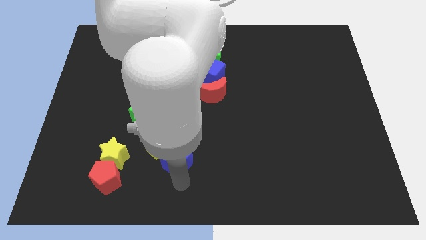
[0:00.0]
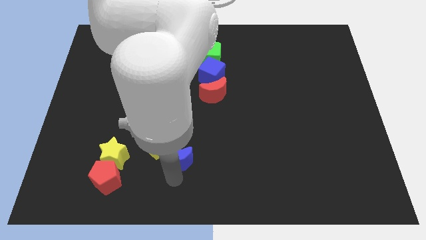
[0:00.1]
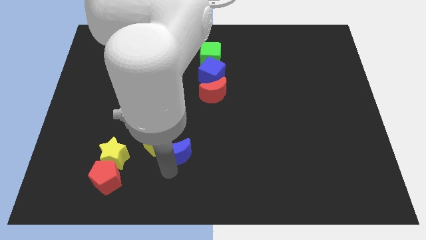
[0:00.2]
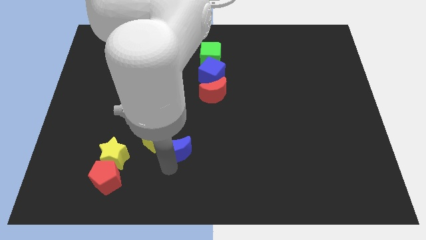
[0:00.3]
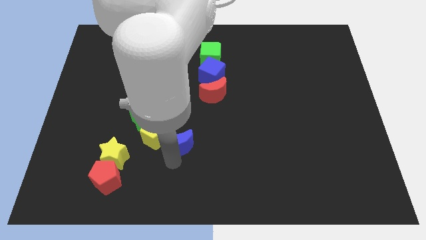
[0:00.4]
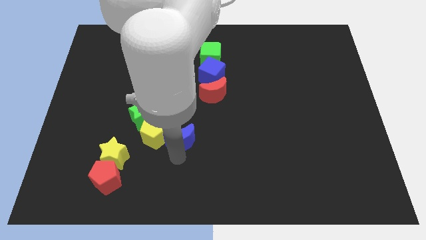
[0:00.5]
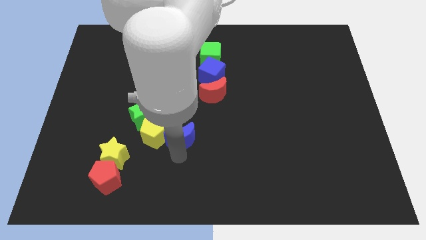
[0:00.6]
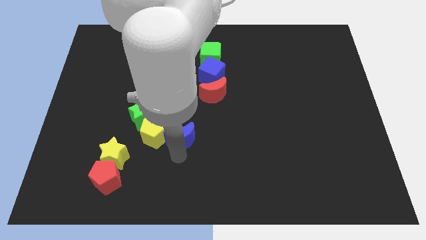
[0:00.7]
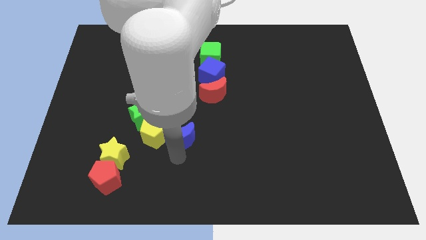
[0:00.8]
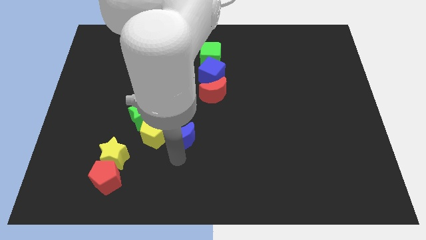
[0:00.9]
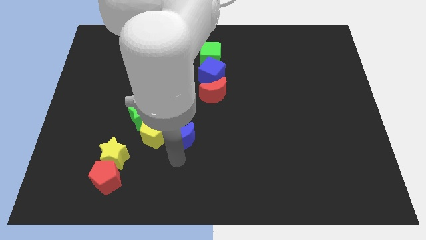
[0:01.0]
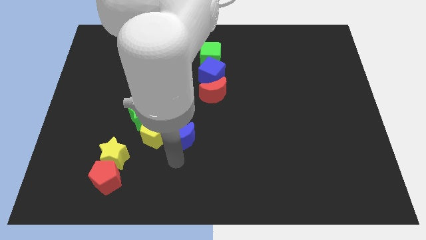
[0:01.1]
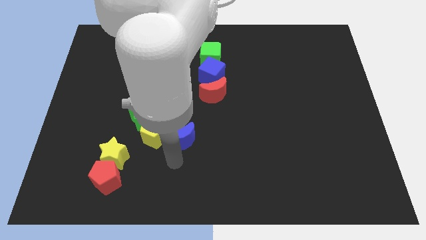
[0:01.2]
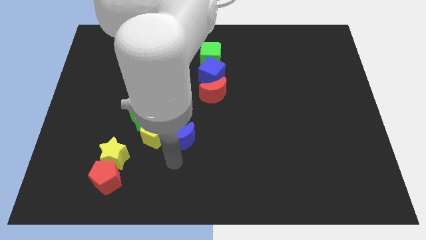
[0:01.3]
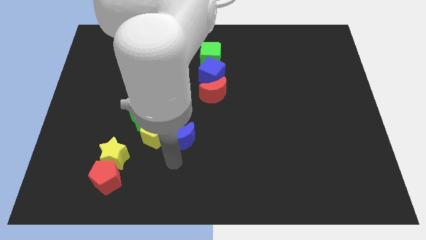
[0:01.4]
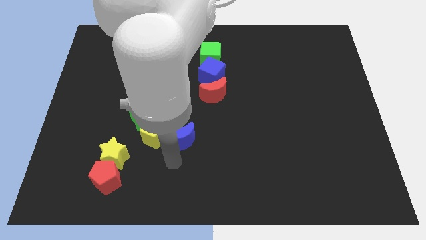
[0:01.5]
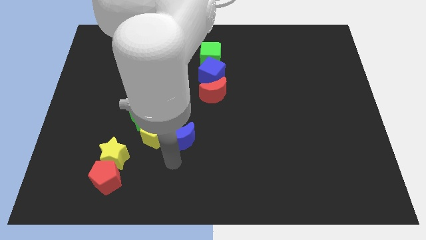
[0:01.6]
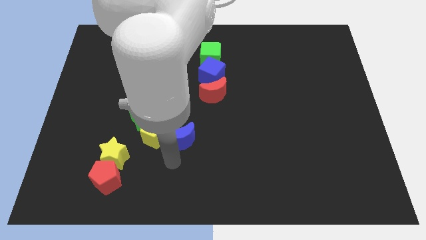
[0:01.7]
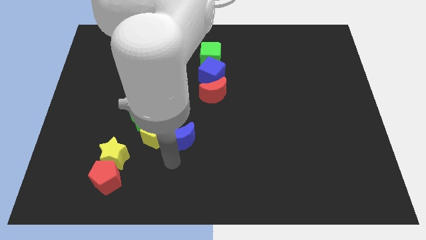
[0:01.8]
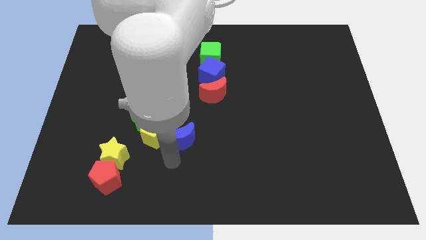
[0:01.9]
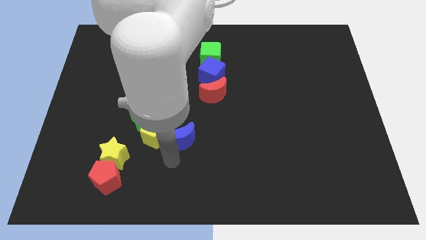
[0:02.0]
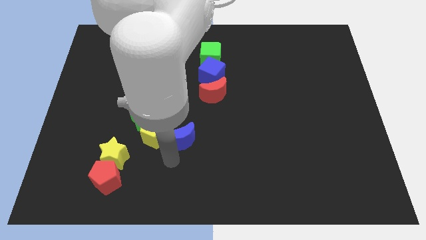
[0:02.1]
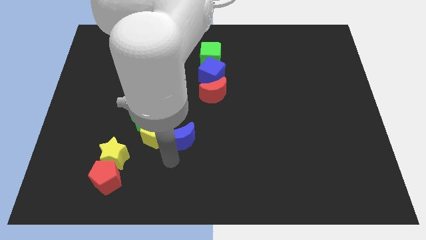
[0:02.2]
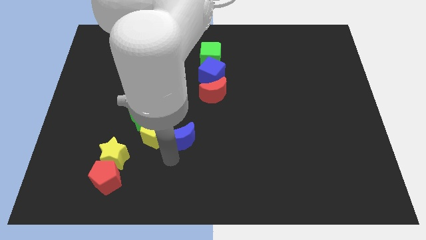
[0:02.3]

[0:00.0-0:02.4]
move blue crescent right of yellow pentagon

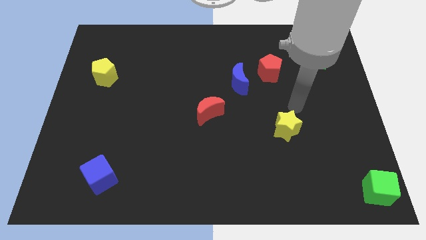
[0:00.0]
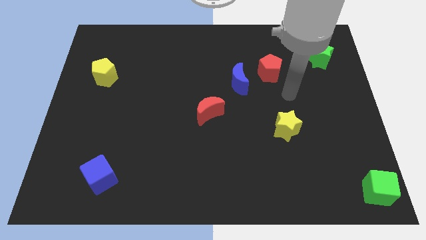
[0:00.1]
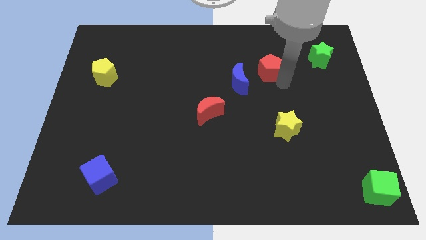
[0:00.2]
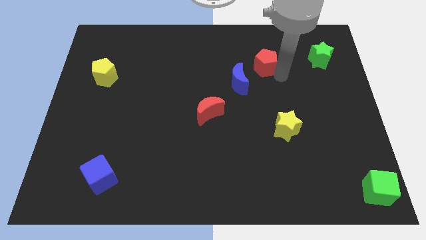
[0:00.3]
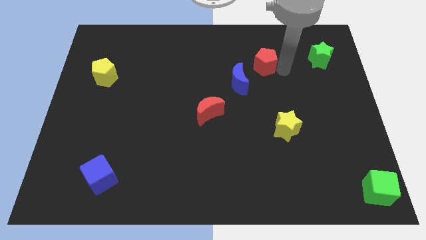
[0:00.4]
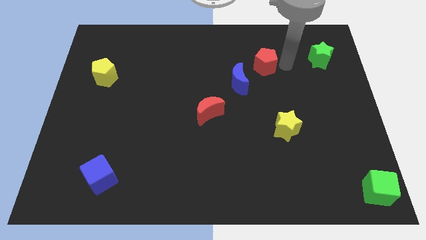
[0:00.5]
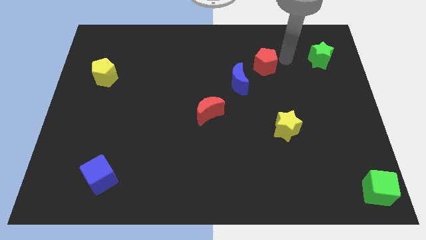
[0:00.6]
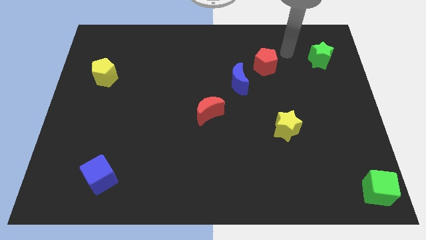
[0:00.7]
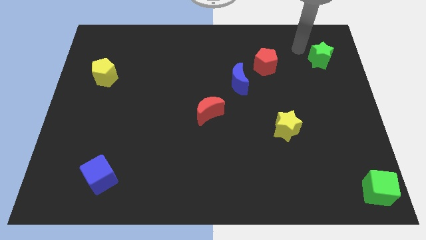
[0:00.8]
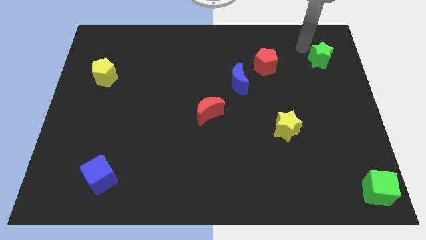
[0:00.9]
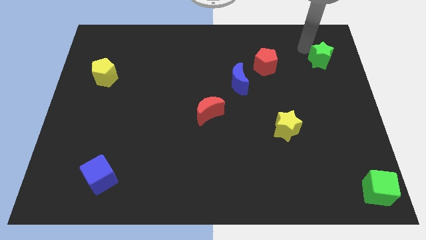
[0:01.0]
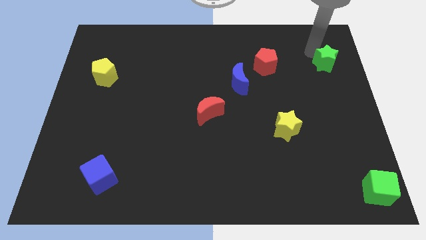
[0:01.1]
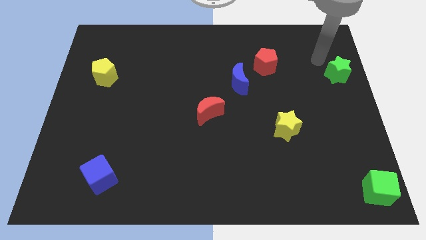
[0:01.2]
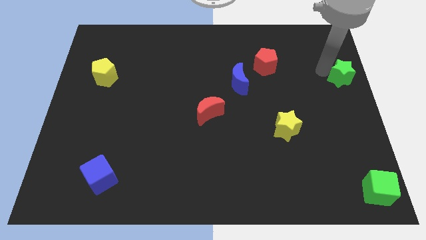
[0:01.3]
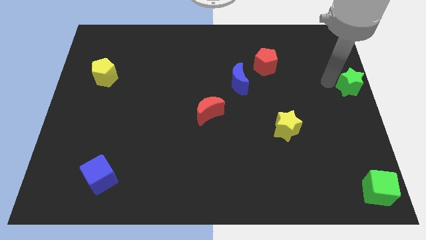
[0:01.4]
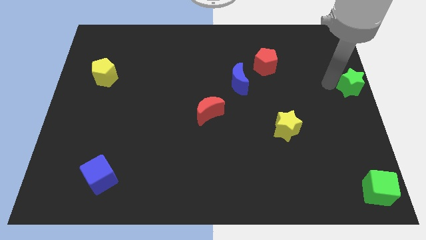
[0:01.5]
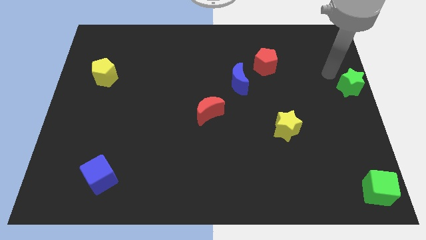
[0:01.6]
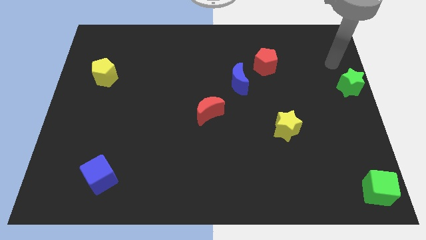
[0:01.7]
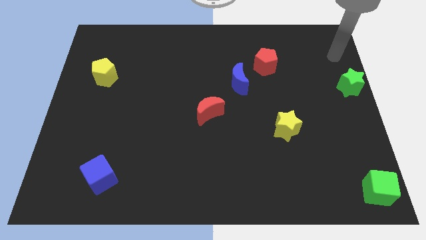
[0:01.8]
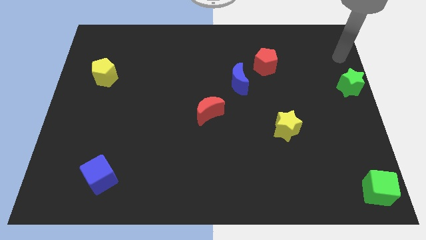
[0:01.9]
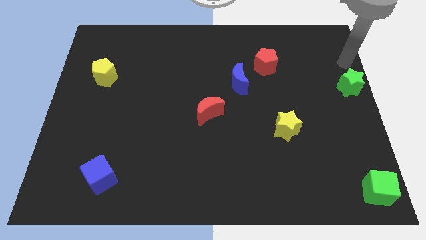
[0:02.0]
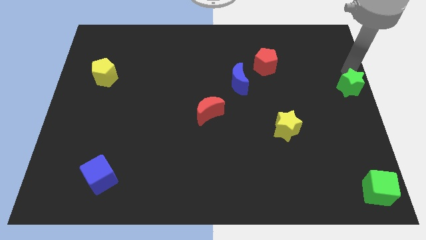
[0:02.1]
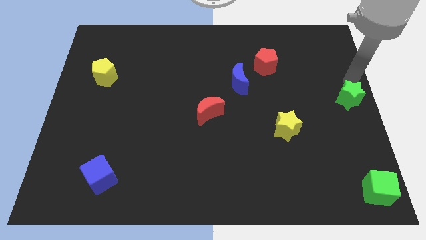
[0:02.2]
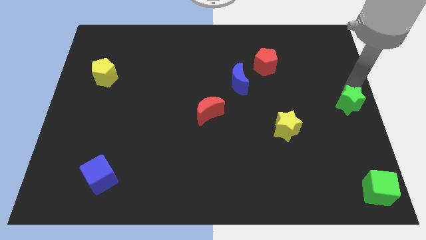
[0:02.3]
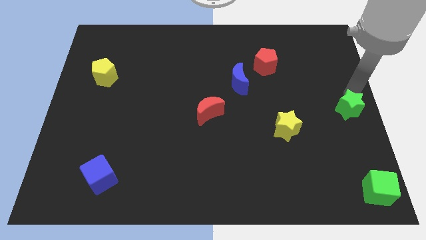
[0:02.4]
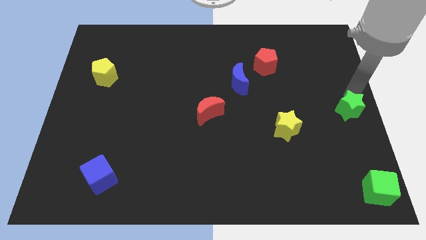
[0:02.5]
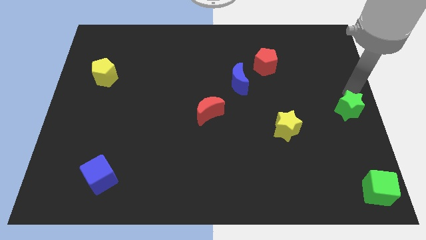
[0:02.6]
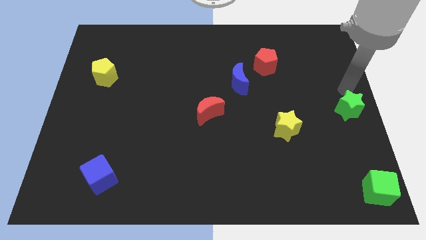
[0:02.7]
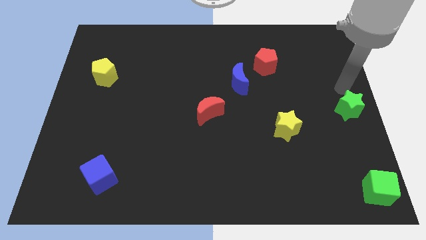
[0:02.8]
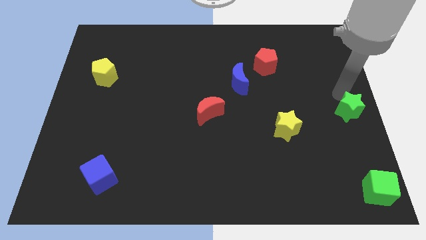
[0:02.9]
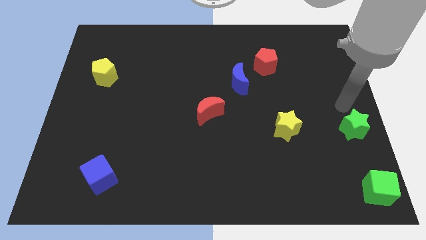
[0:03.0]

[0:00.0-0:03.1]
move the green star right to the yellow star

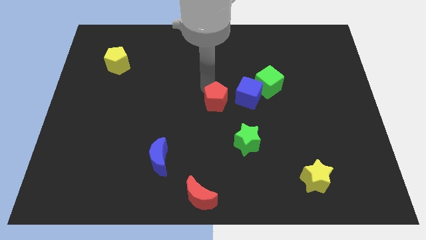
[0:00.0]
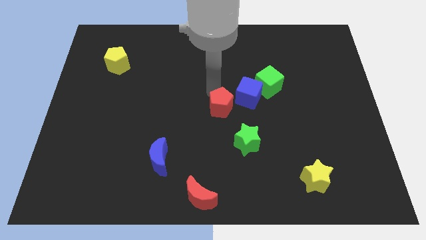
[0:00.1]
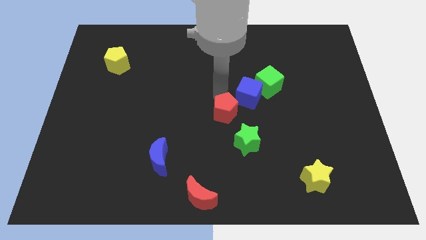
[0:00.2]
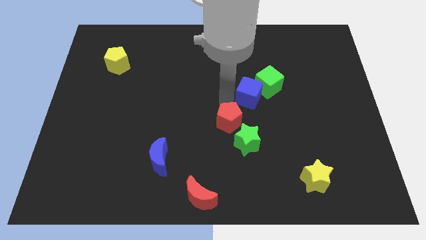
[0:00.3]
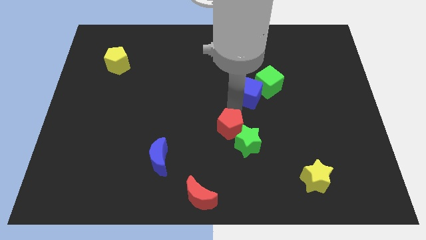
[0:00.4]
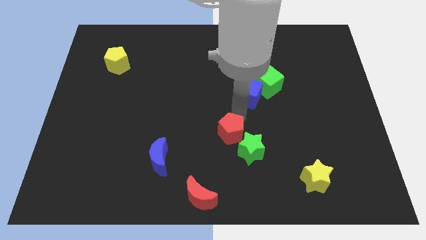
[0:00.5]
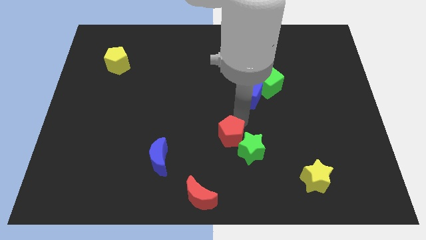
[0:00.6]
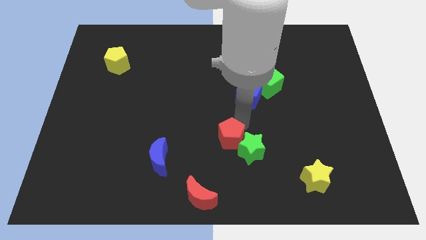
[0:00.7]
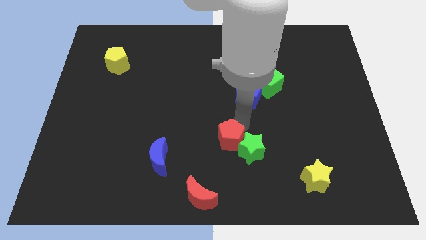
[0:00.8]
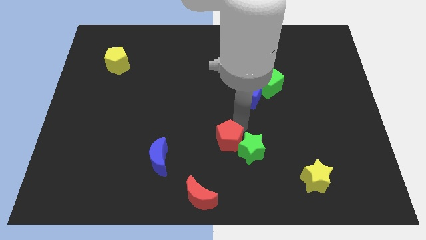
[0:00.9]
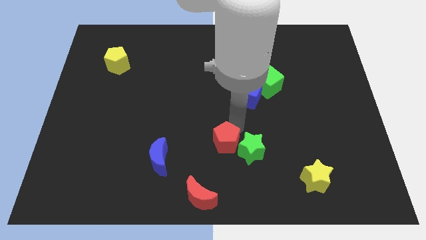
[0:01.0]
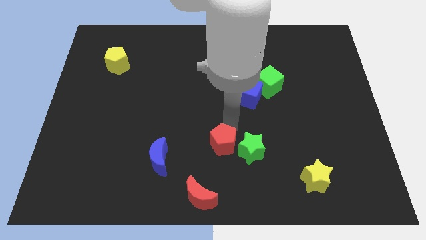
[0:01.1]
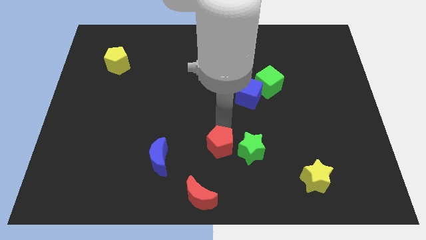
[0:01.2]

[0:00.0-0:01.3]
move the red pentagon to the left of the green star

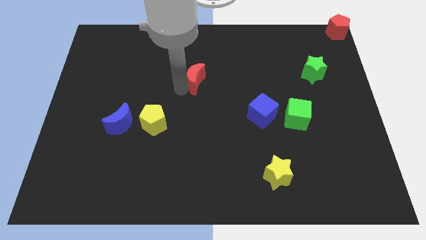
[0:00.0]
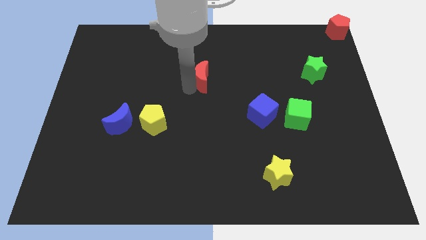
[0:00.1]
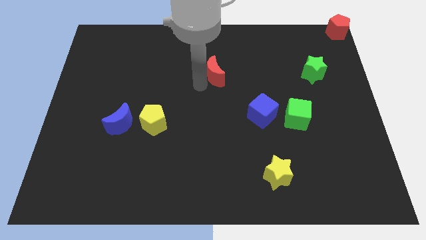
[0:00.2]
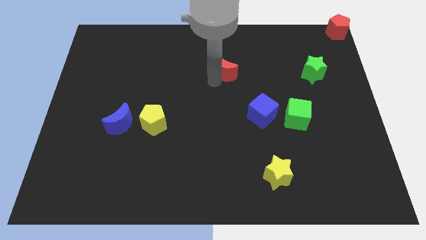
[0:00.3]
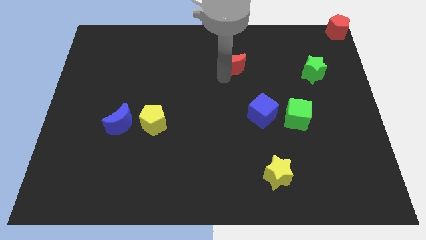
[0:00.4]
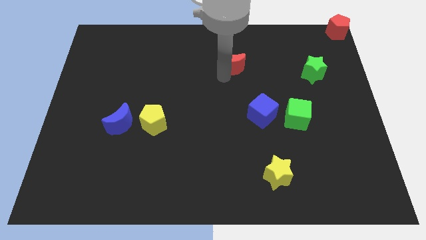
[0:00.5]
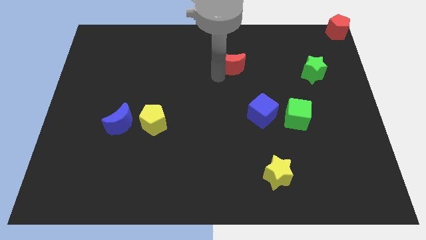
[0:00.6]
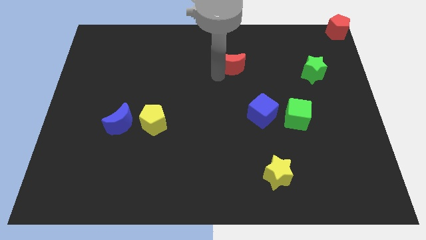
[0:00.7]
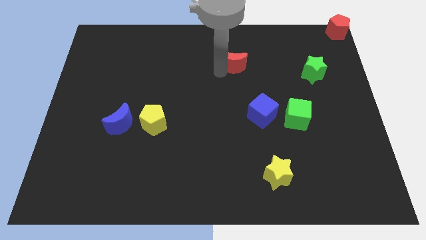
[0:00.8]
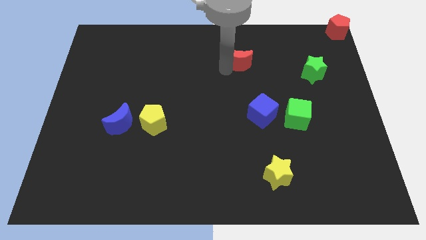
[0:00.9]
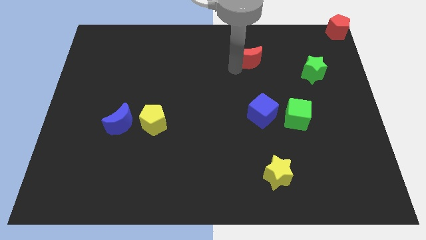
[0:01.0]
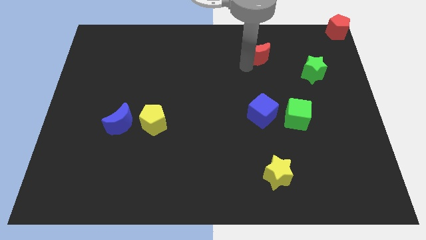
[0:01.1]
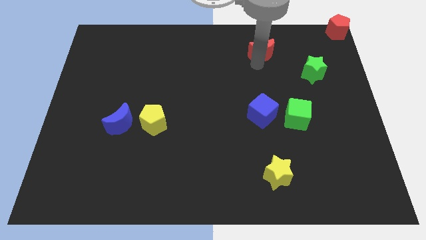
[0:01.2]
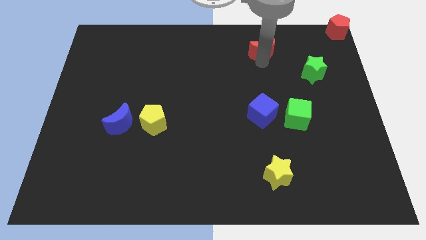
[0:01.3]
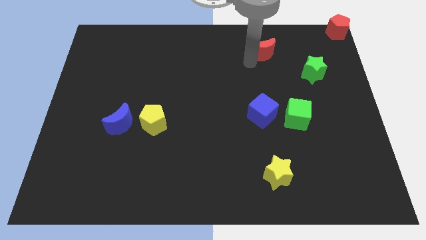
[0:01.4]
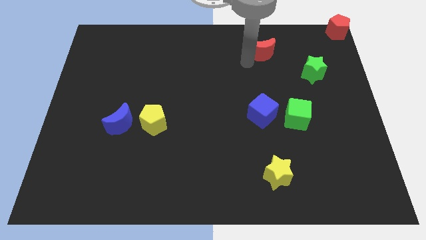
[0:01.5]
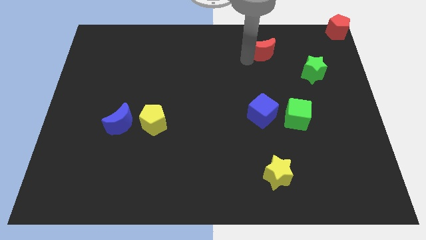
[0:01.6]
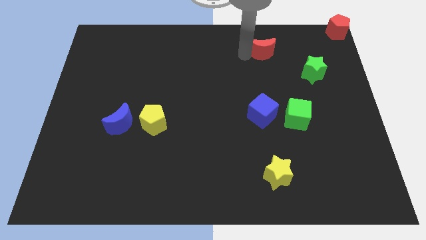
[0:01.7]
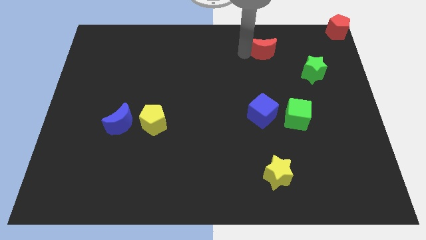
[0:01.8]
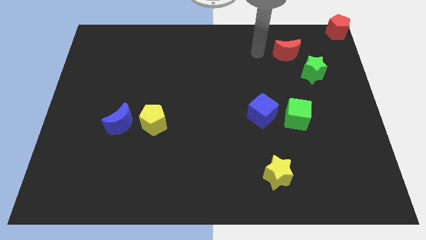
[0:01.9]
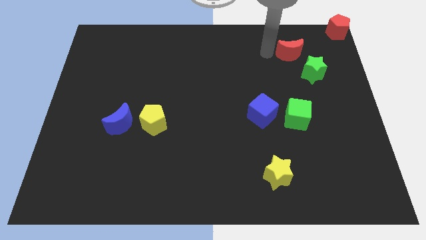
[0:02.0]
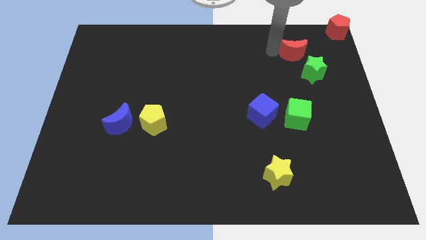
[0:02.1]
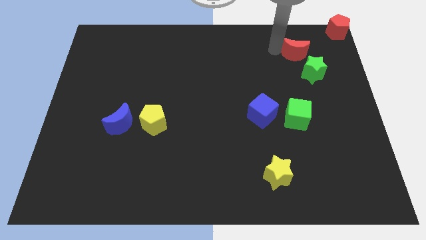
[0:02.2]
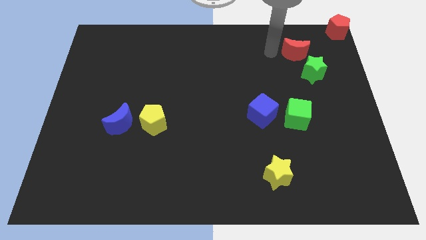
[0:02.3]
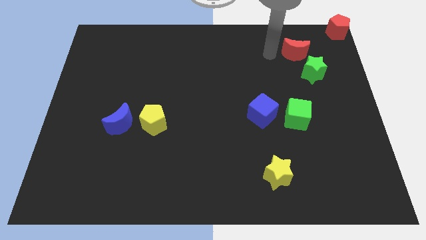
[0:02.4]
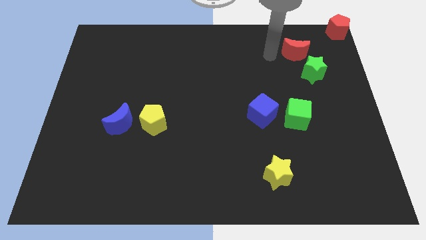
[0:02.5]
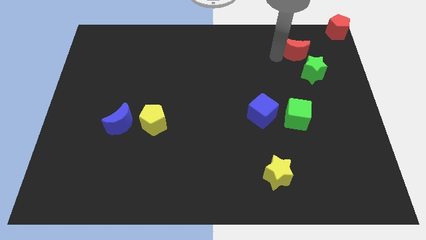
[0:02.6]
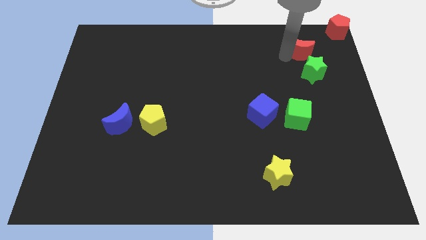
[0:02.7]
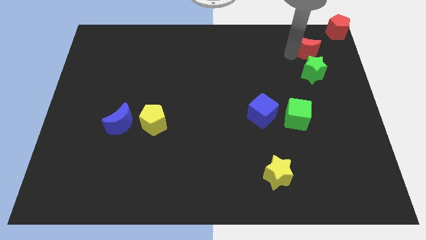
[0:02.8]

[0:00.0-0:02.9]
place red crescent above green star
